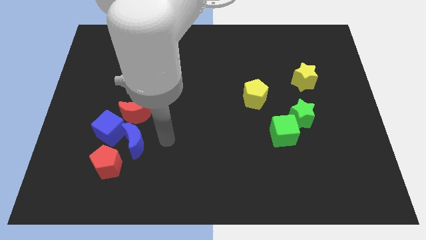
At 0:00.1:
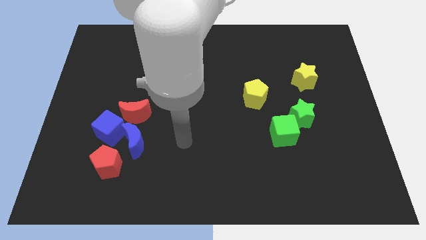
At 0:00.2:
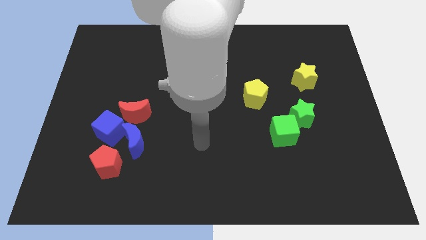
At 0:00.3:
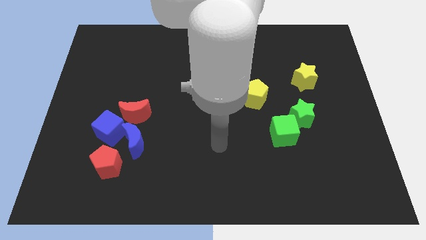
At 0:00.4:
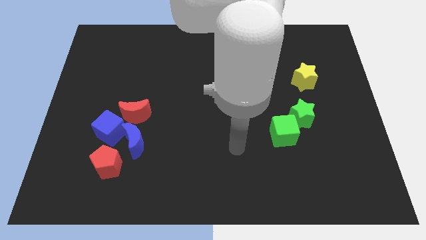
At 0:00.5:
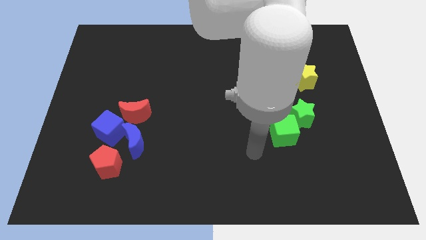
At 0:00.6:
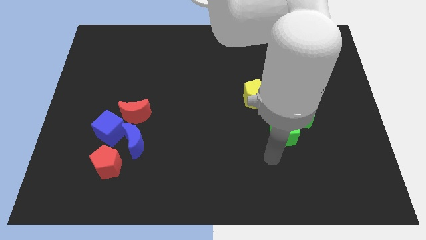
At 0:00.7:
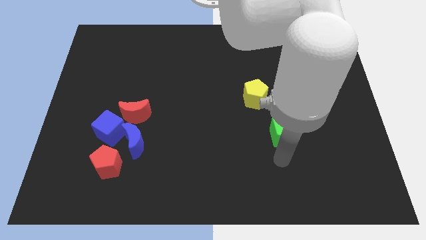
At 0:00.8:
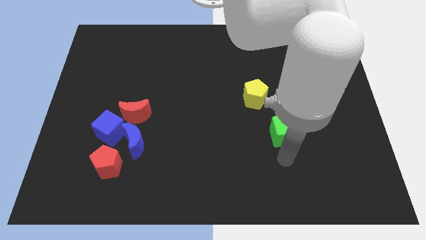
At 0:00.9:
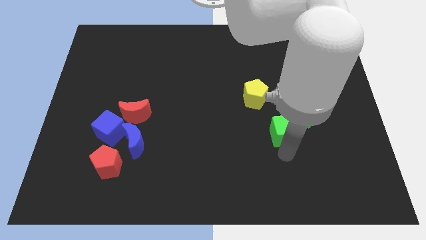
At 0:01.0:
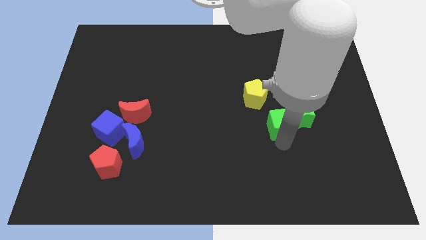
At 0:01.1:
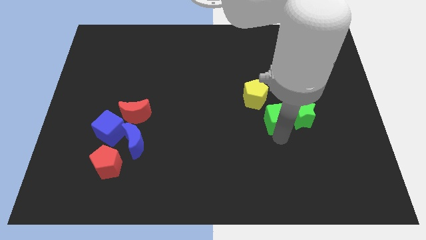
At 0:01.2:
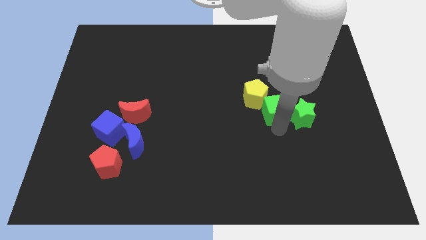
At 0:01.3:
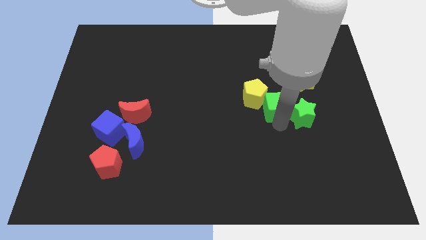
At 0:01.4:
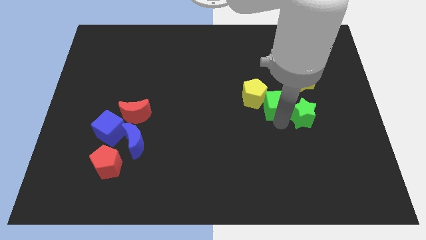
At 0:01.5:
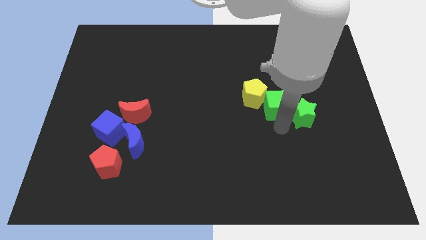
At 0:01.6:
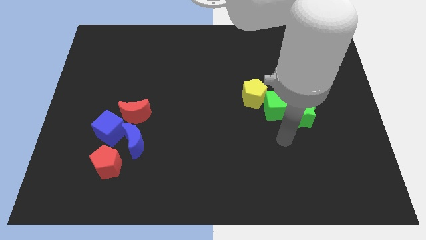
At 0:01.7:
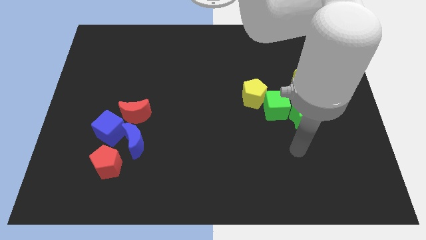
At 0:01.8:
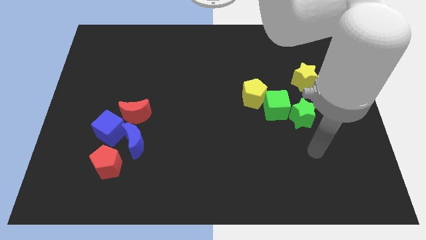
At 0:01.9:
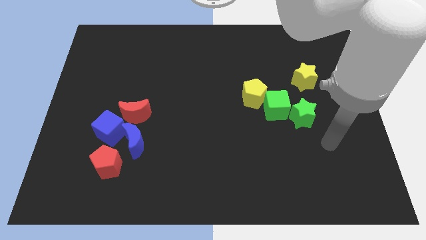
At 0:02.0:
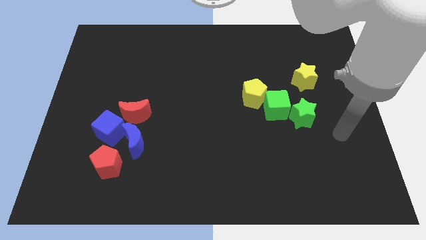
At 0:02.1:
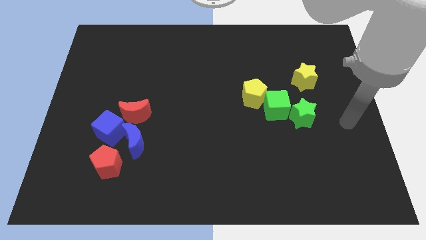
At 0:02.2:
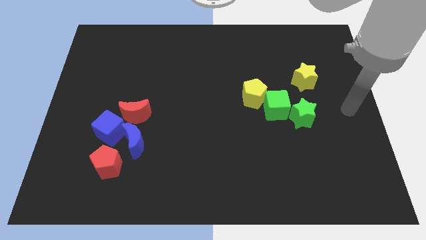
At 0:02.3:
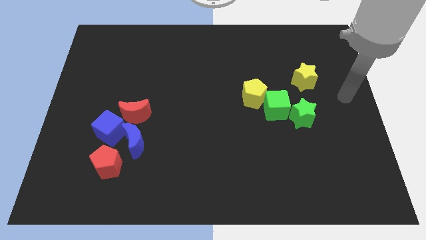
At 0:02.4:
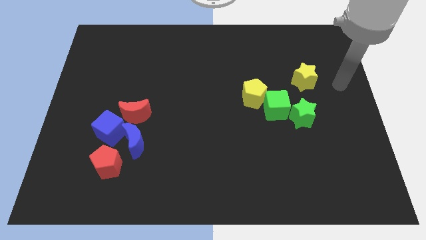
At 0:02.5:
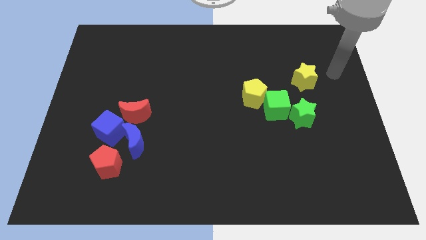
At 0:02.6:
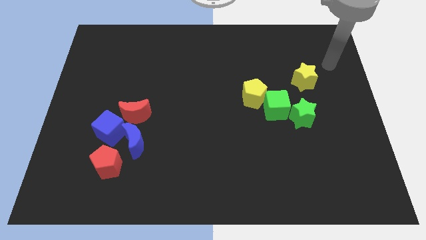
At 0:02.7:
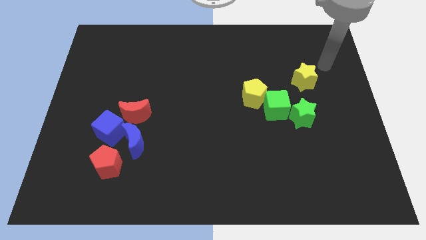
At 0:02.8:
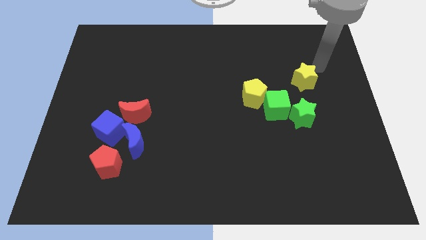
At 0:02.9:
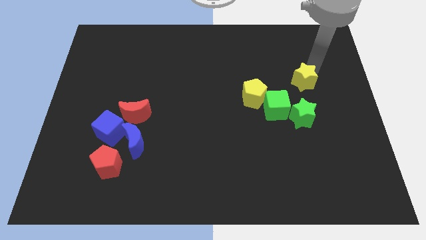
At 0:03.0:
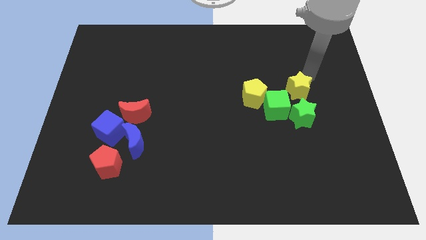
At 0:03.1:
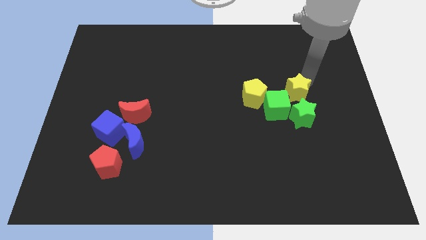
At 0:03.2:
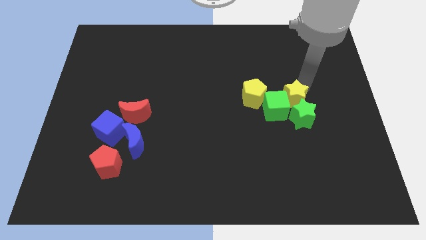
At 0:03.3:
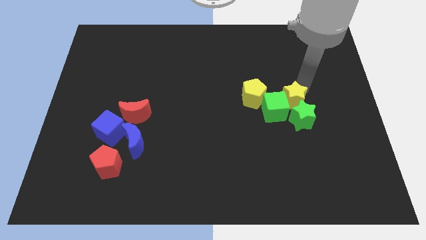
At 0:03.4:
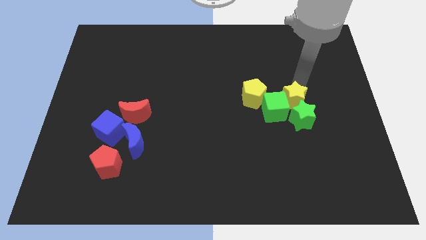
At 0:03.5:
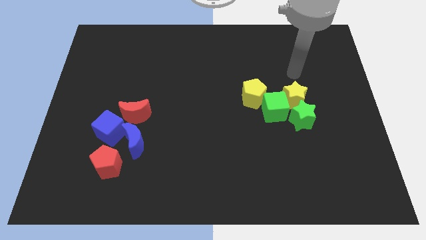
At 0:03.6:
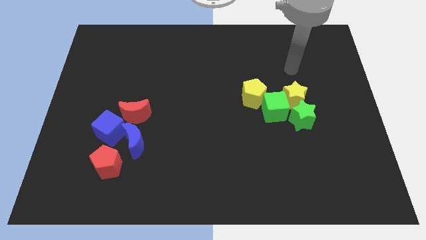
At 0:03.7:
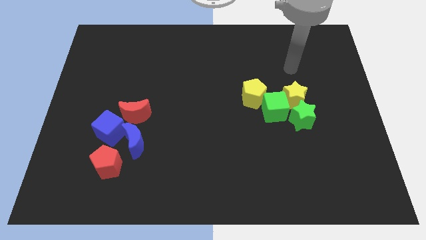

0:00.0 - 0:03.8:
make a group of green and the yellow blocks

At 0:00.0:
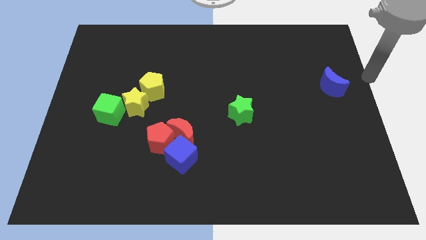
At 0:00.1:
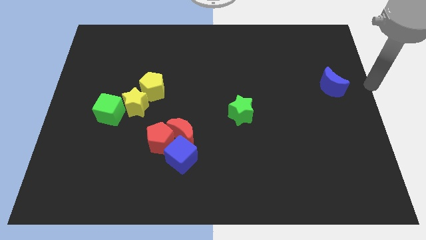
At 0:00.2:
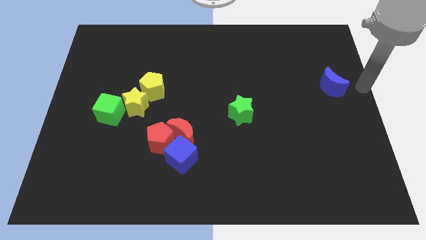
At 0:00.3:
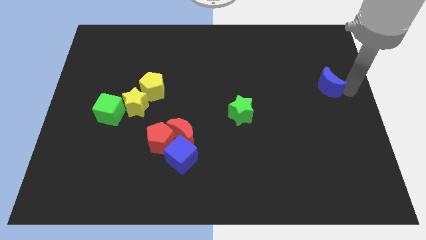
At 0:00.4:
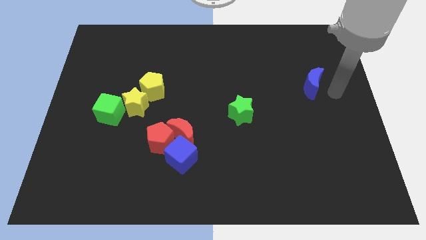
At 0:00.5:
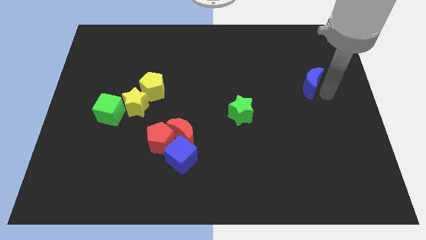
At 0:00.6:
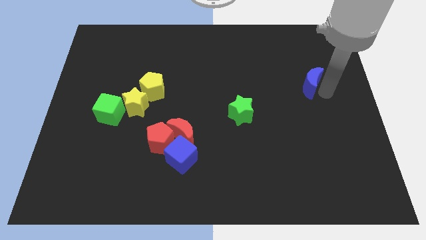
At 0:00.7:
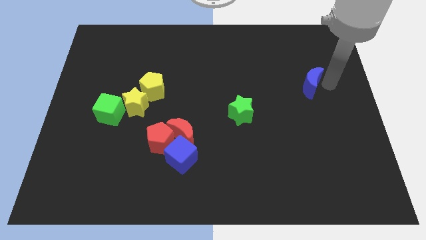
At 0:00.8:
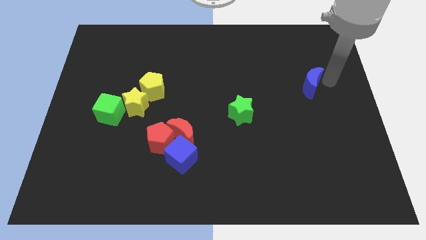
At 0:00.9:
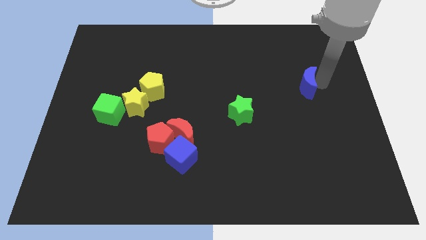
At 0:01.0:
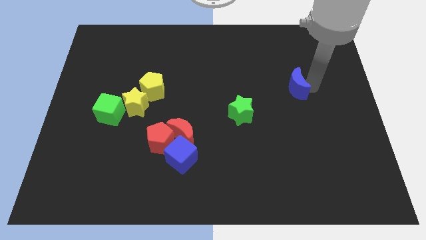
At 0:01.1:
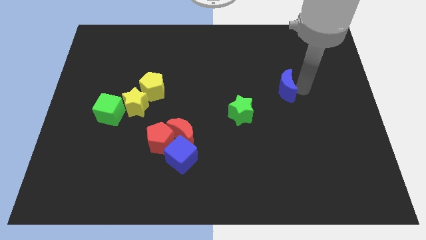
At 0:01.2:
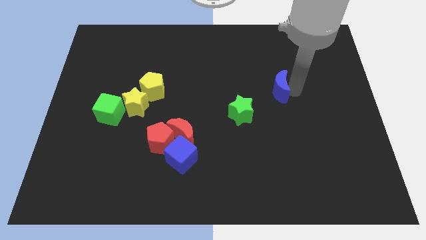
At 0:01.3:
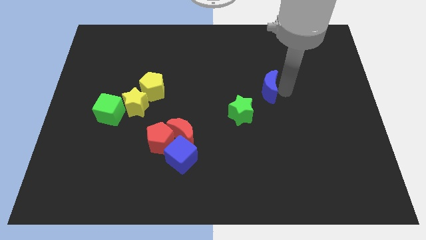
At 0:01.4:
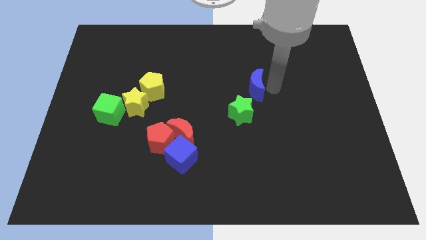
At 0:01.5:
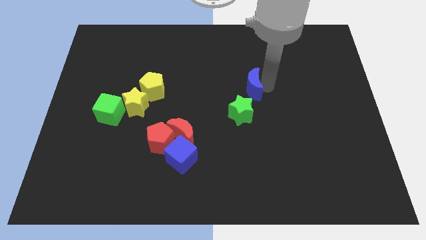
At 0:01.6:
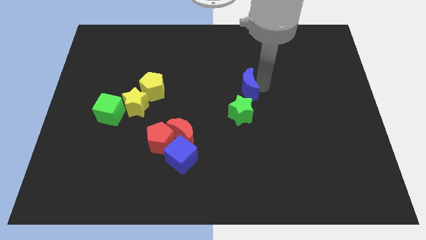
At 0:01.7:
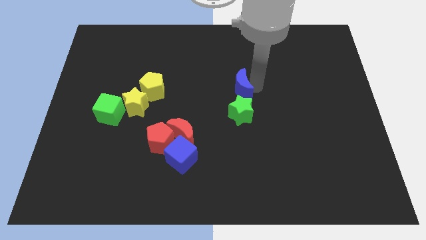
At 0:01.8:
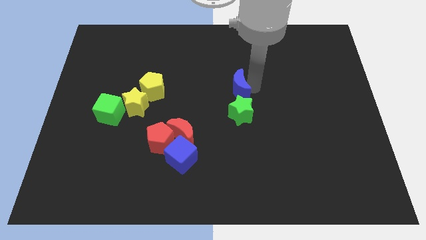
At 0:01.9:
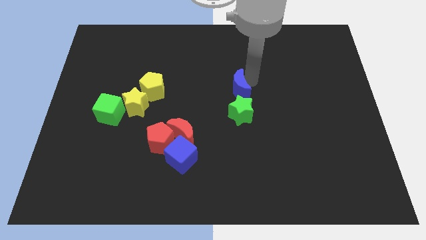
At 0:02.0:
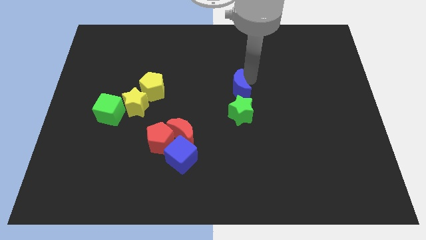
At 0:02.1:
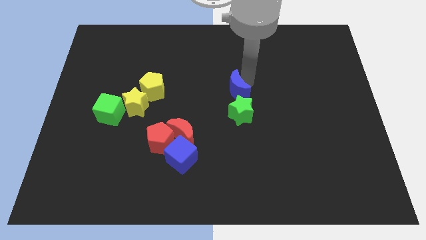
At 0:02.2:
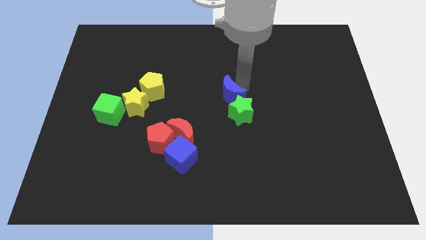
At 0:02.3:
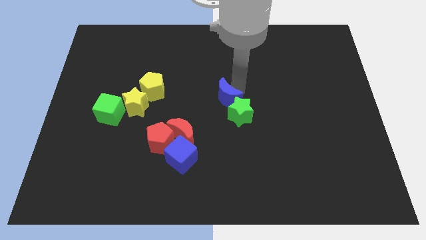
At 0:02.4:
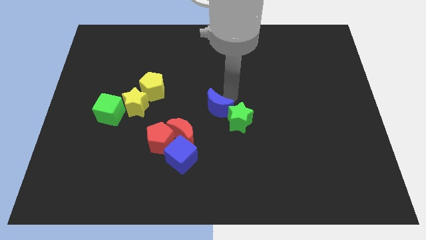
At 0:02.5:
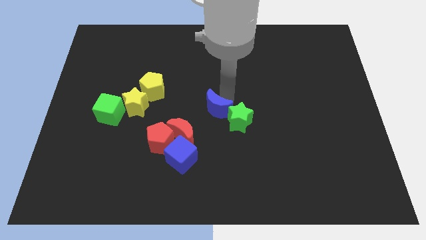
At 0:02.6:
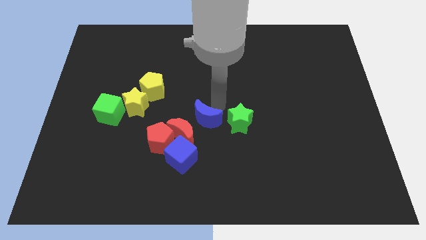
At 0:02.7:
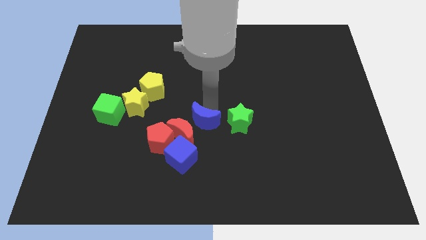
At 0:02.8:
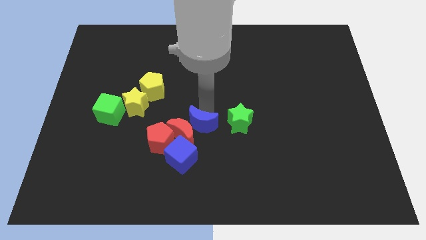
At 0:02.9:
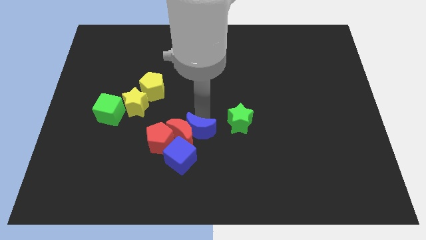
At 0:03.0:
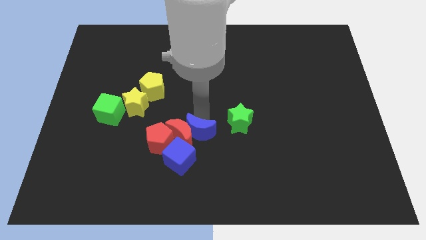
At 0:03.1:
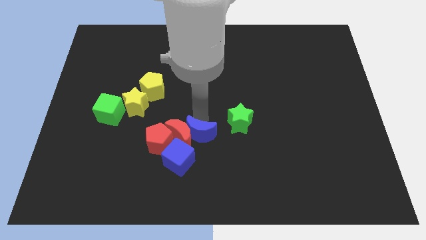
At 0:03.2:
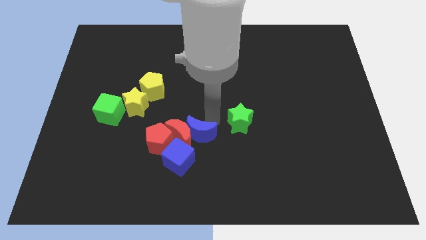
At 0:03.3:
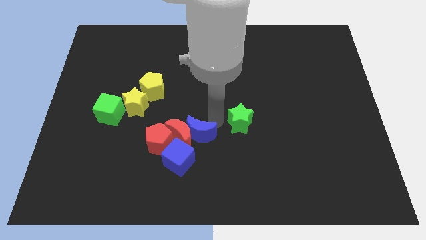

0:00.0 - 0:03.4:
move the blue crescent into the red crescent

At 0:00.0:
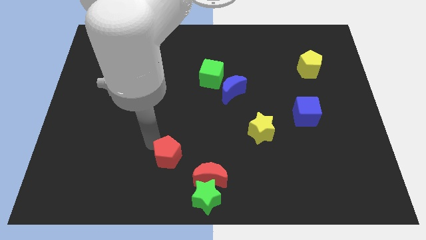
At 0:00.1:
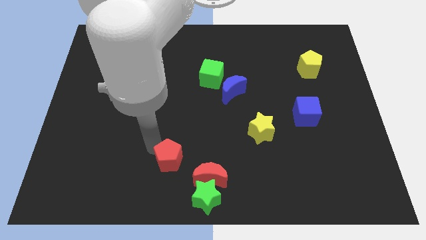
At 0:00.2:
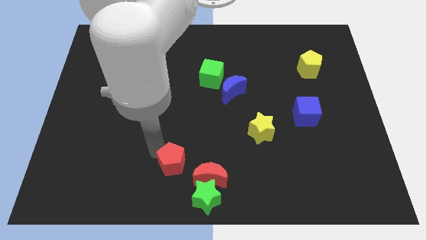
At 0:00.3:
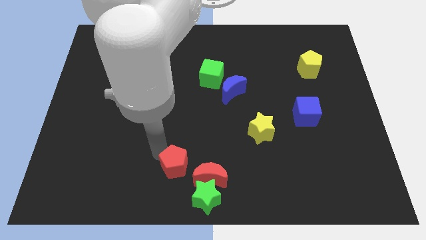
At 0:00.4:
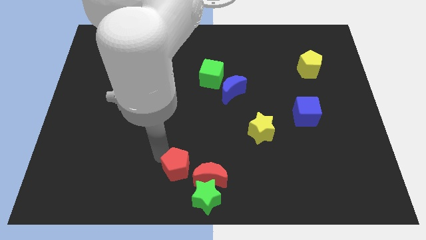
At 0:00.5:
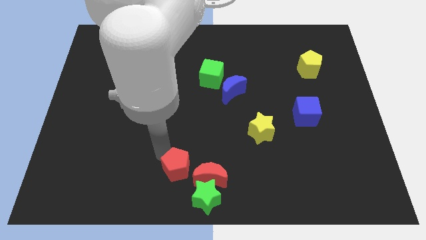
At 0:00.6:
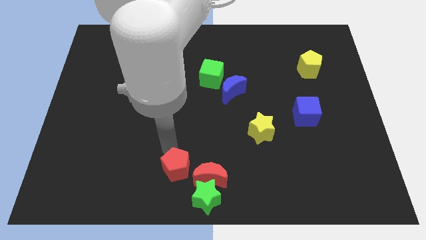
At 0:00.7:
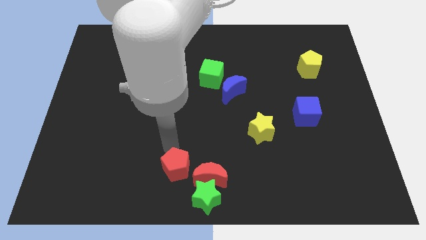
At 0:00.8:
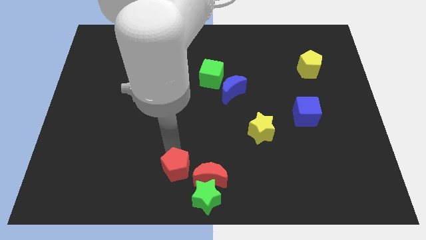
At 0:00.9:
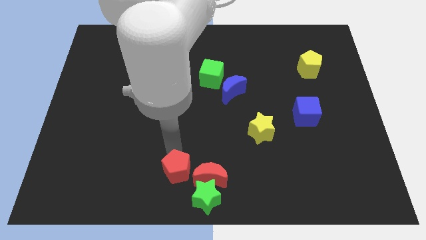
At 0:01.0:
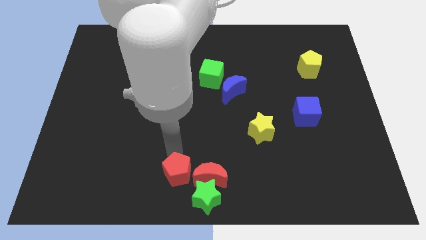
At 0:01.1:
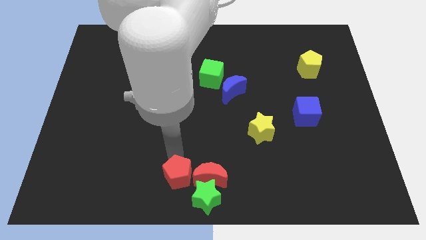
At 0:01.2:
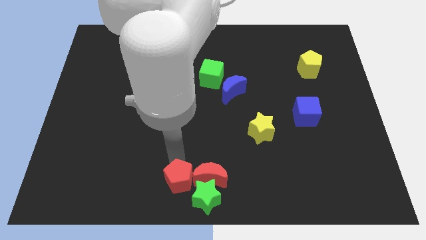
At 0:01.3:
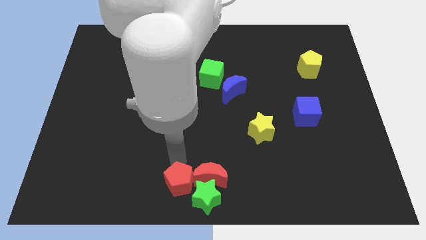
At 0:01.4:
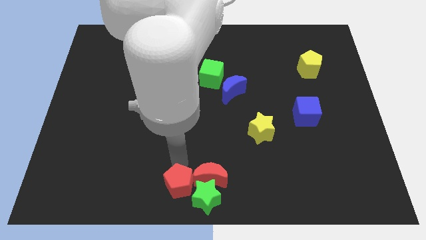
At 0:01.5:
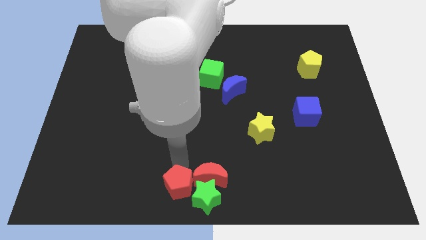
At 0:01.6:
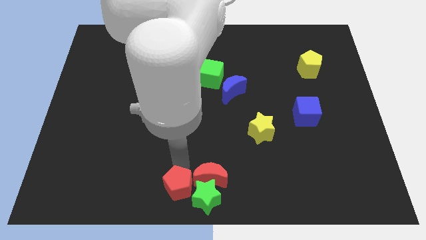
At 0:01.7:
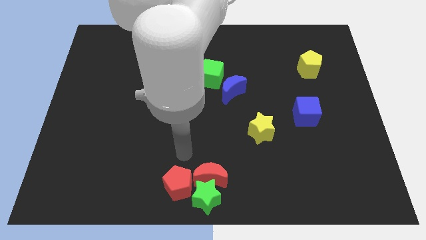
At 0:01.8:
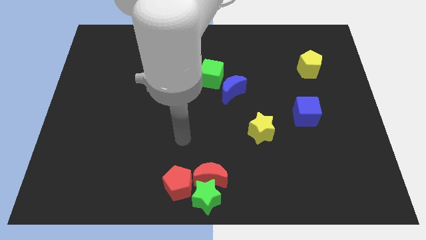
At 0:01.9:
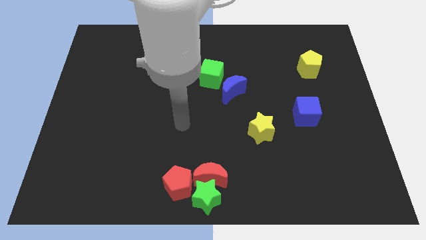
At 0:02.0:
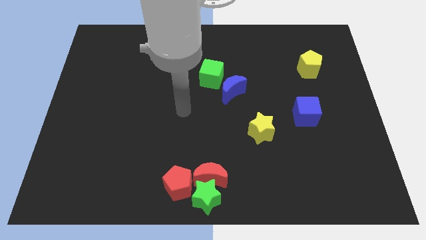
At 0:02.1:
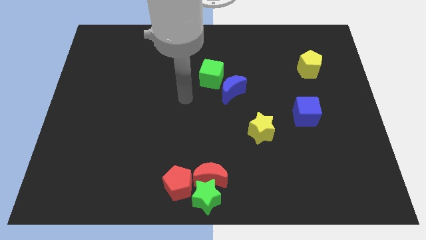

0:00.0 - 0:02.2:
place the red pentagon towards the left side of the red crescent
